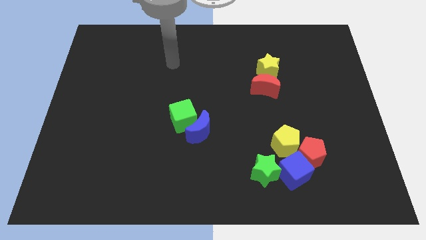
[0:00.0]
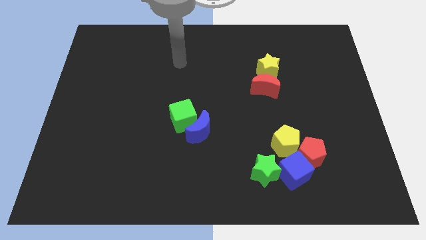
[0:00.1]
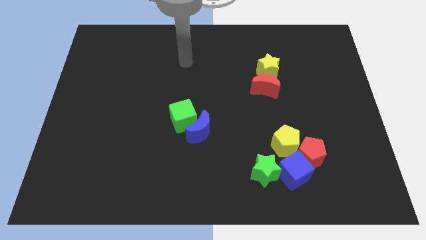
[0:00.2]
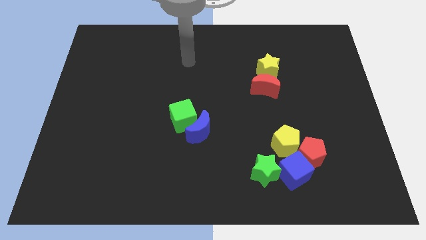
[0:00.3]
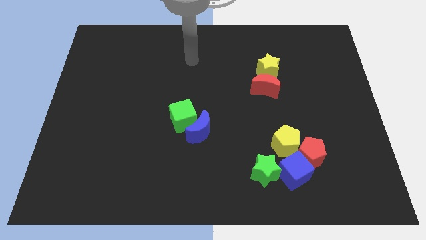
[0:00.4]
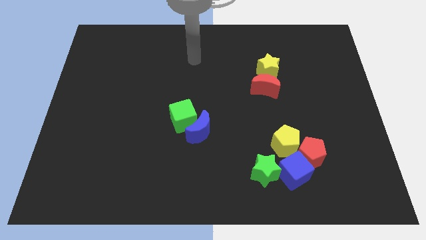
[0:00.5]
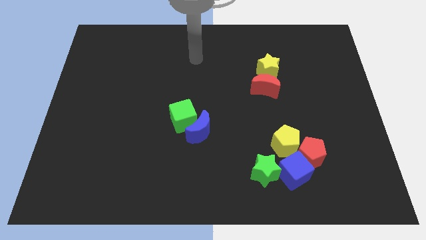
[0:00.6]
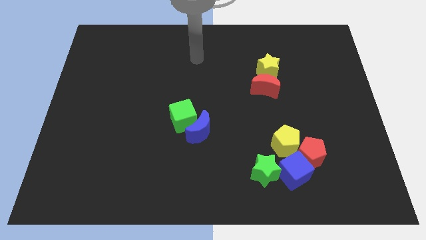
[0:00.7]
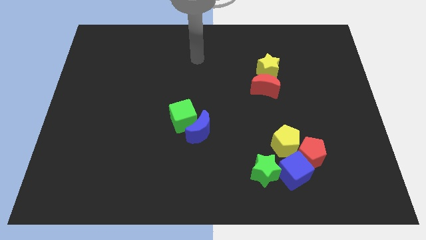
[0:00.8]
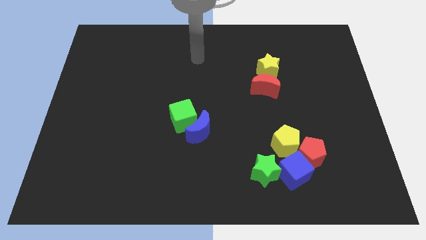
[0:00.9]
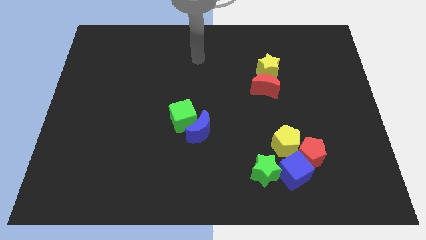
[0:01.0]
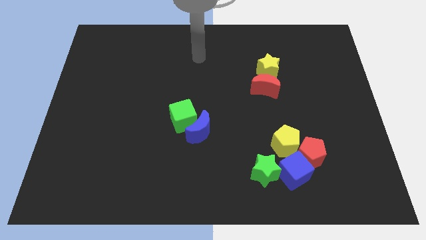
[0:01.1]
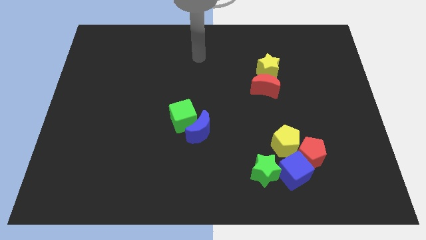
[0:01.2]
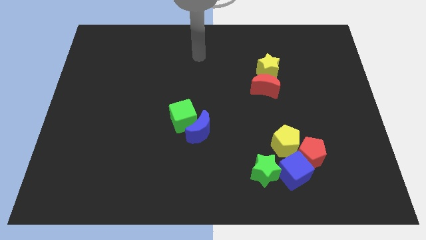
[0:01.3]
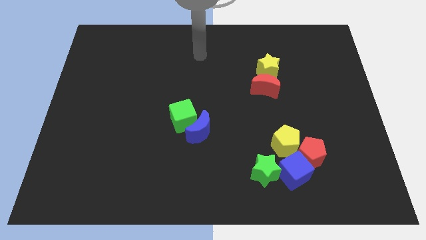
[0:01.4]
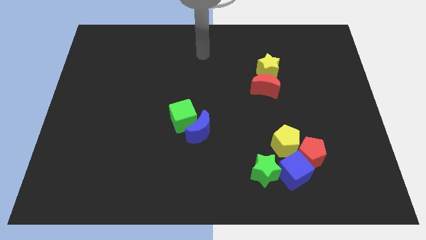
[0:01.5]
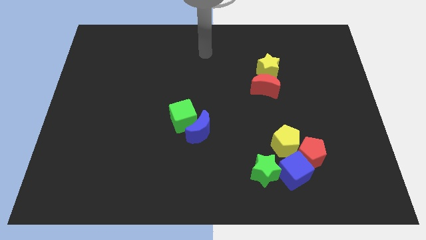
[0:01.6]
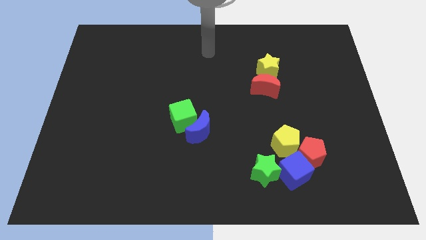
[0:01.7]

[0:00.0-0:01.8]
move the arm towards the top centre of the board

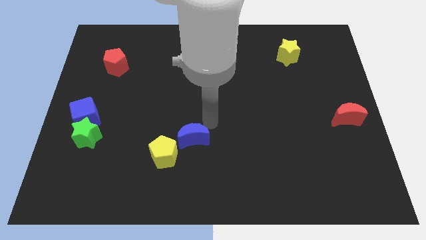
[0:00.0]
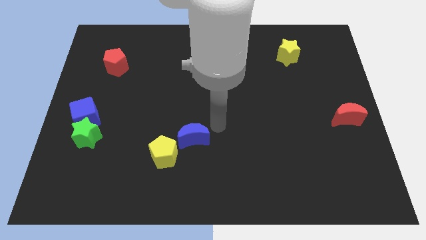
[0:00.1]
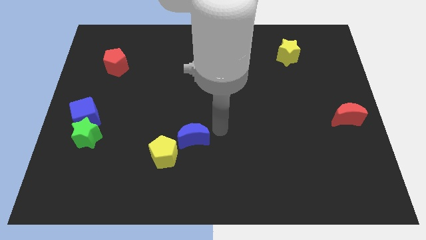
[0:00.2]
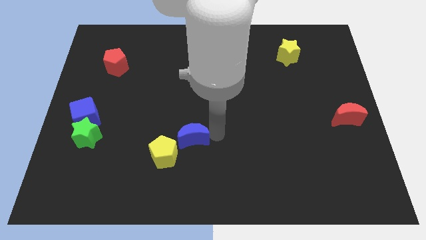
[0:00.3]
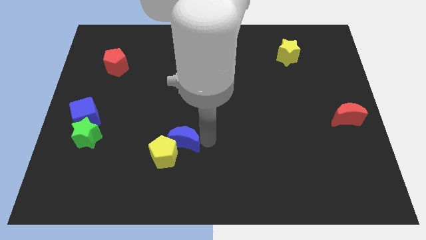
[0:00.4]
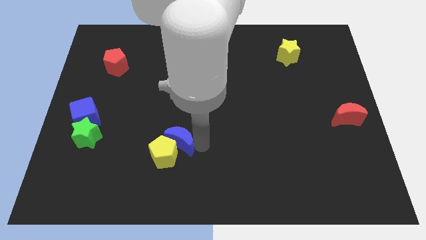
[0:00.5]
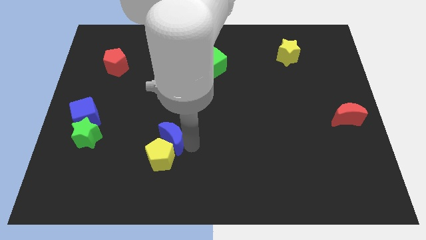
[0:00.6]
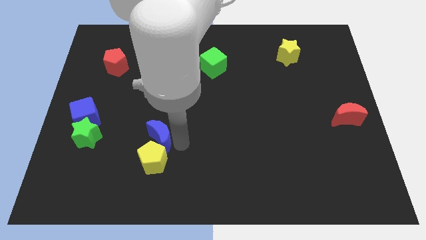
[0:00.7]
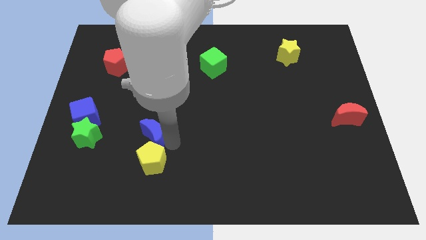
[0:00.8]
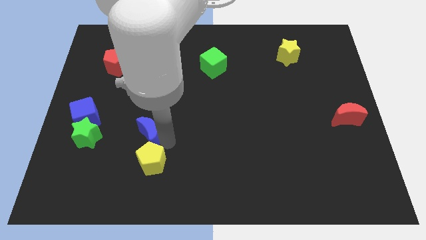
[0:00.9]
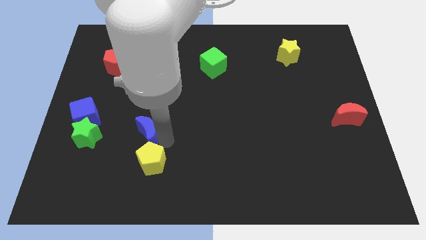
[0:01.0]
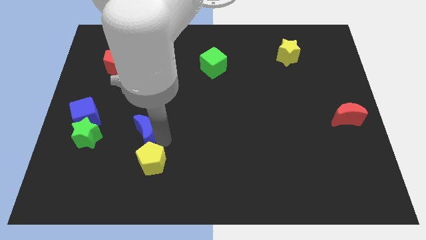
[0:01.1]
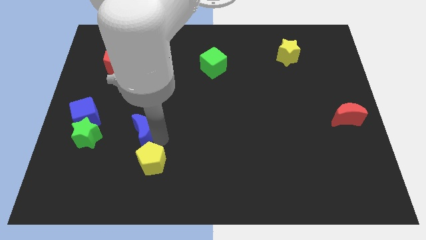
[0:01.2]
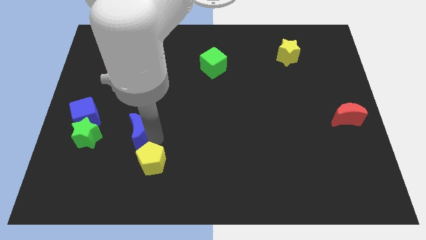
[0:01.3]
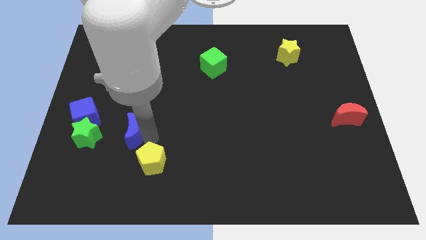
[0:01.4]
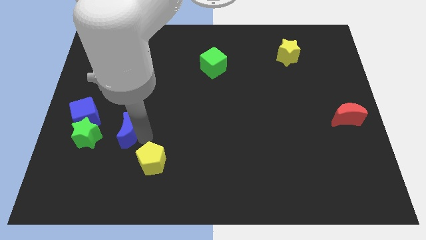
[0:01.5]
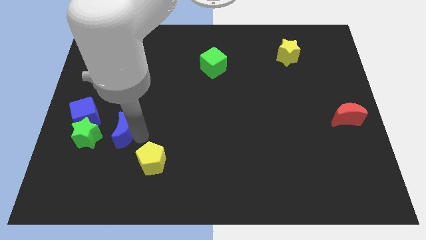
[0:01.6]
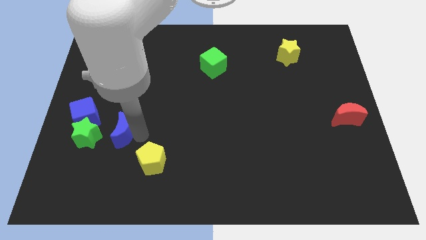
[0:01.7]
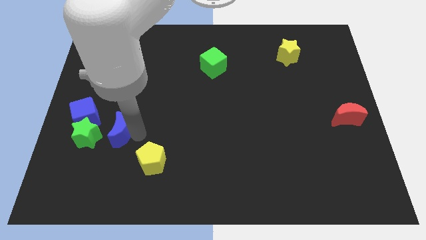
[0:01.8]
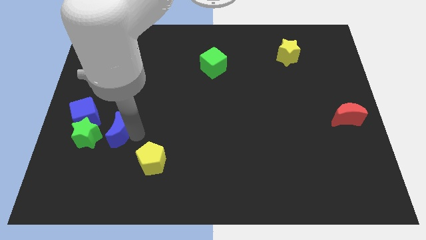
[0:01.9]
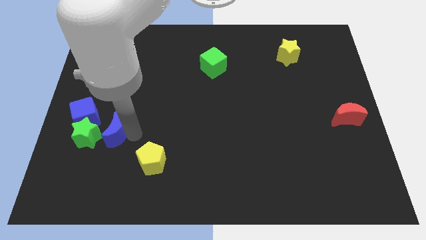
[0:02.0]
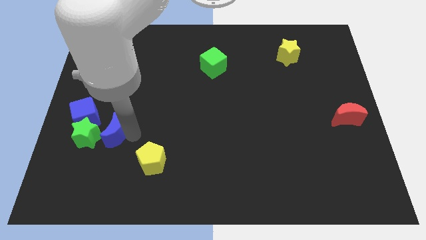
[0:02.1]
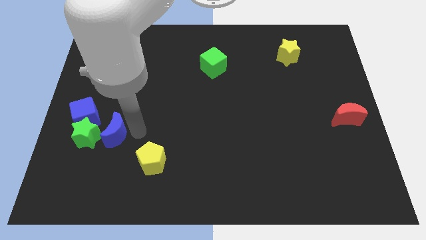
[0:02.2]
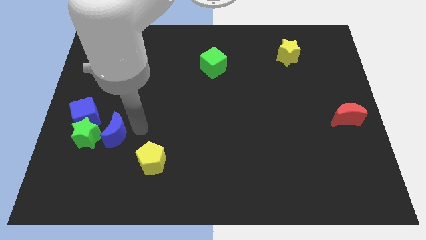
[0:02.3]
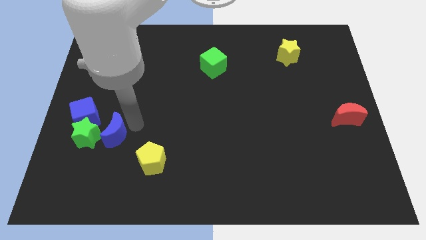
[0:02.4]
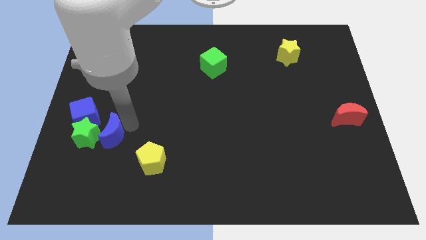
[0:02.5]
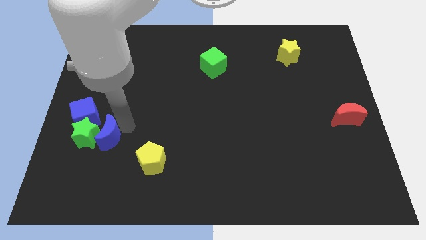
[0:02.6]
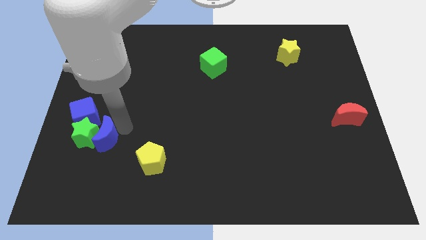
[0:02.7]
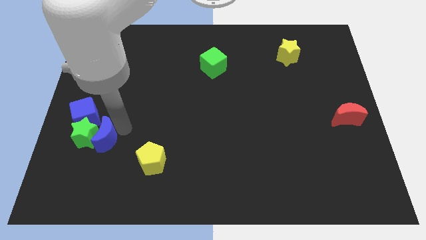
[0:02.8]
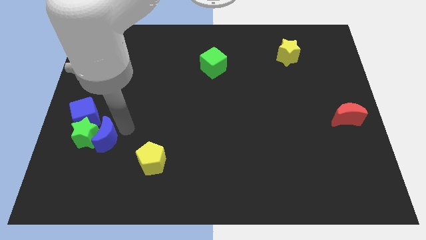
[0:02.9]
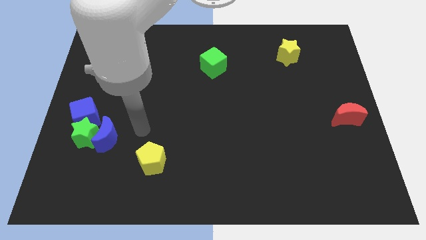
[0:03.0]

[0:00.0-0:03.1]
separate the blue moon with yellow pentagon towards the green star

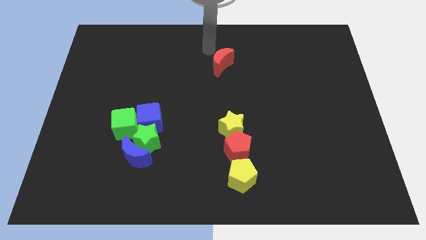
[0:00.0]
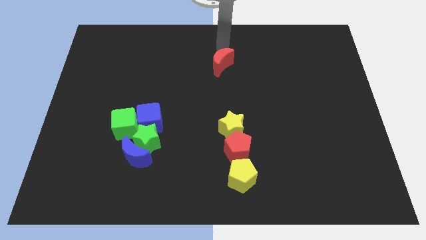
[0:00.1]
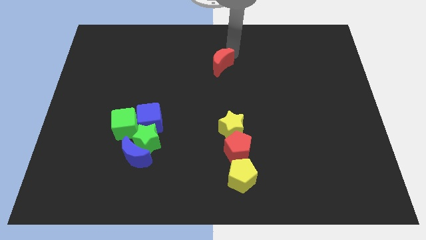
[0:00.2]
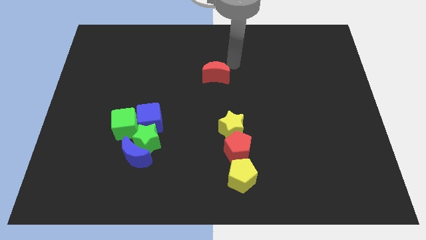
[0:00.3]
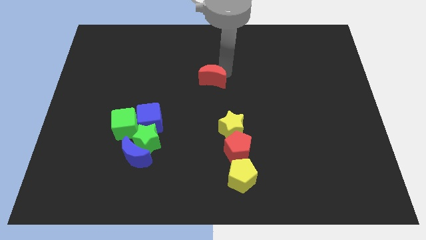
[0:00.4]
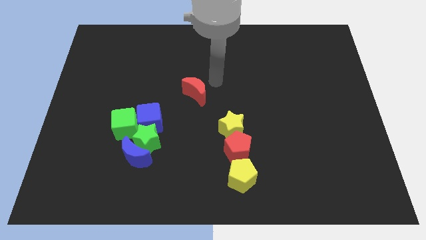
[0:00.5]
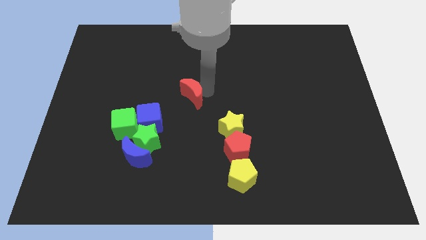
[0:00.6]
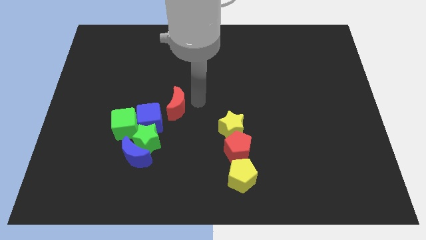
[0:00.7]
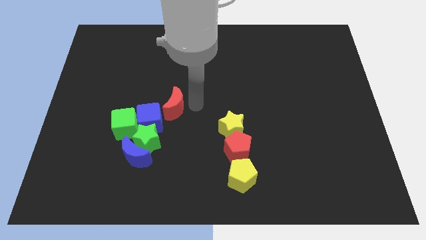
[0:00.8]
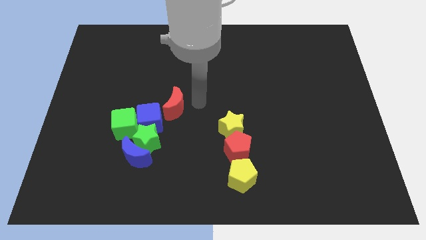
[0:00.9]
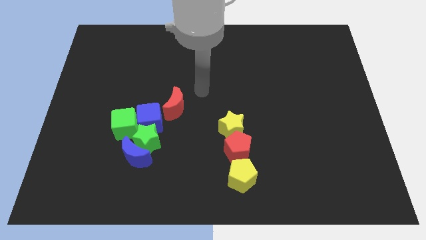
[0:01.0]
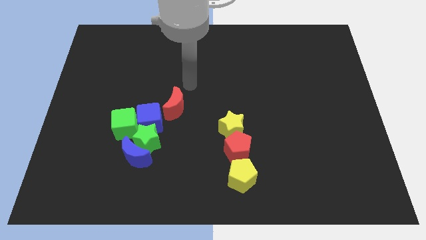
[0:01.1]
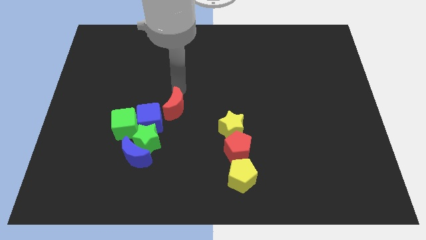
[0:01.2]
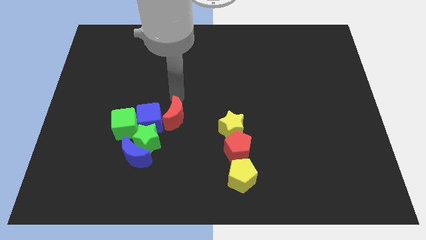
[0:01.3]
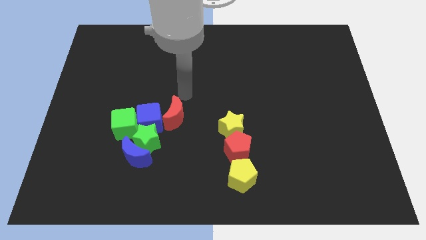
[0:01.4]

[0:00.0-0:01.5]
push the red moon to the right of the blue cube

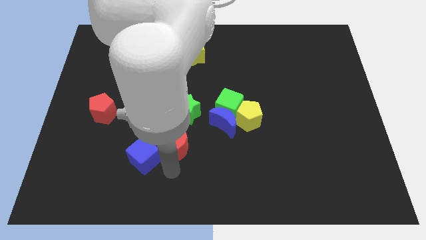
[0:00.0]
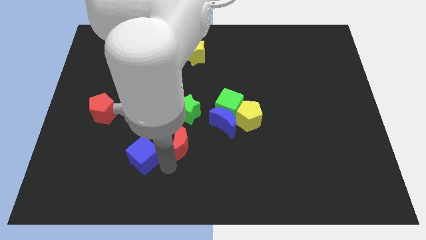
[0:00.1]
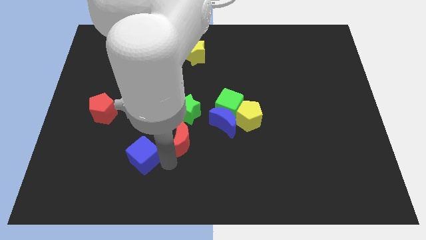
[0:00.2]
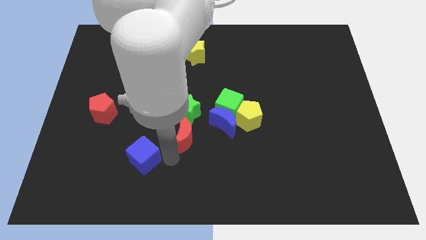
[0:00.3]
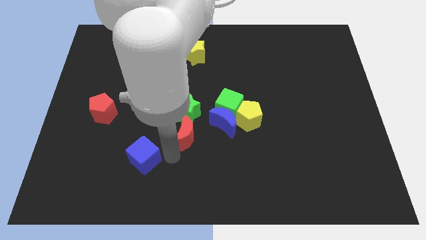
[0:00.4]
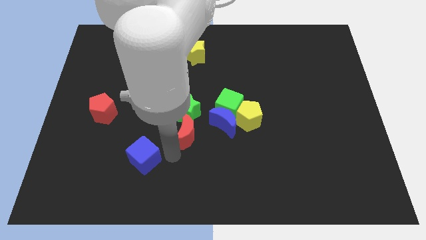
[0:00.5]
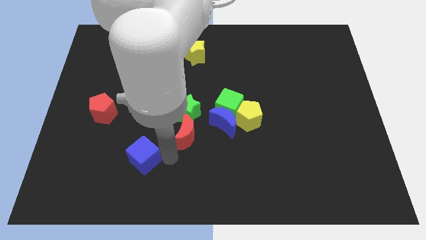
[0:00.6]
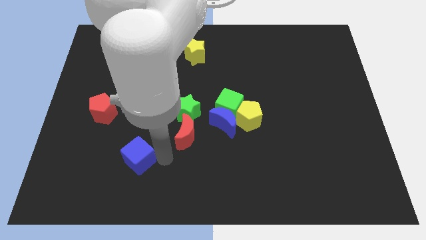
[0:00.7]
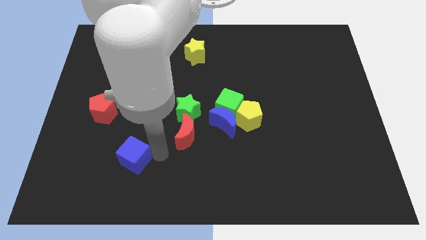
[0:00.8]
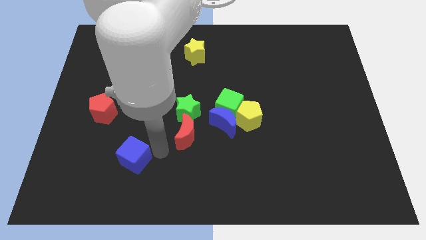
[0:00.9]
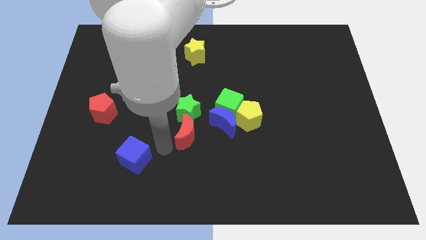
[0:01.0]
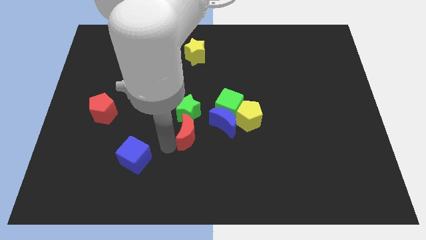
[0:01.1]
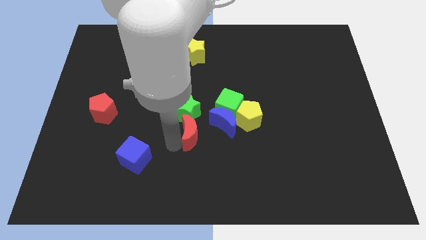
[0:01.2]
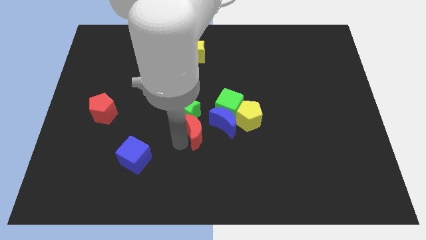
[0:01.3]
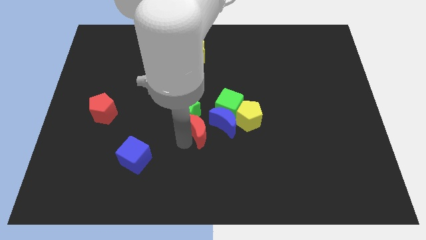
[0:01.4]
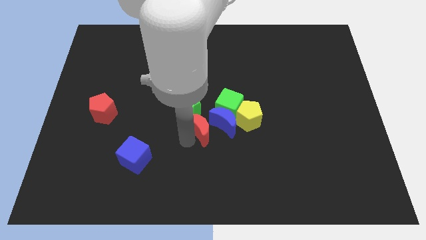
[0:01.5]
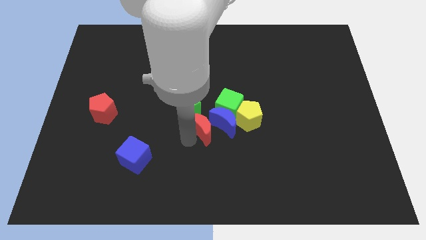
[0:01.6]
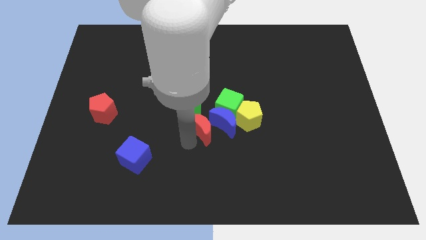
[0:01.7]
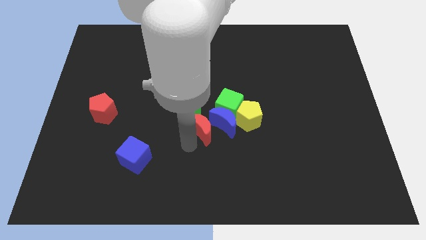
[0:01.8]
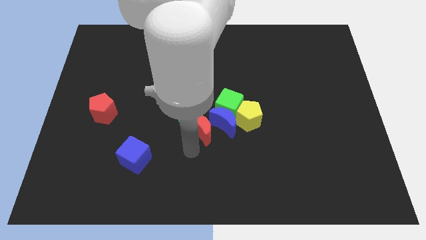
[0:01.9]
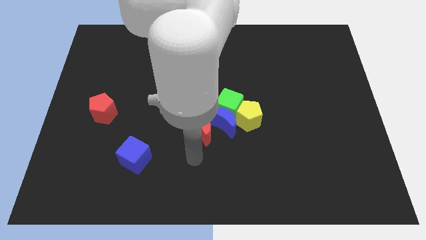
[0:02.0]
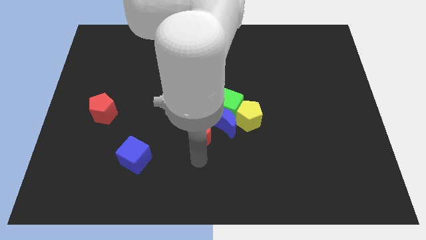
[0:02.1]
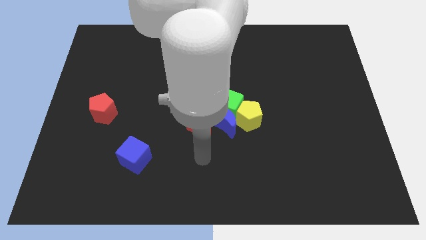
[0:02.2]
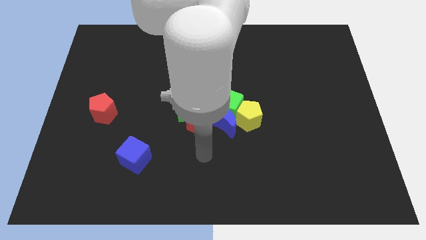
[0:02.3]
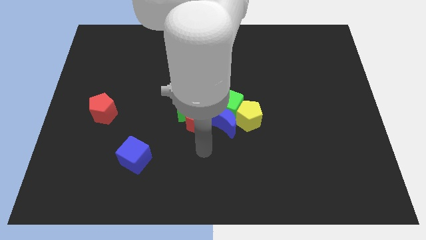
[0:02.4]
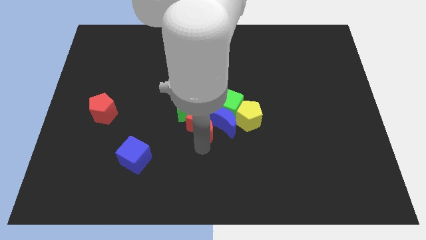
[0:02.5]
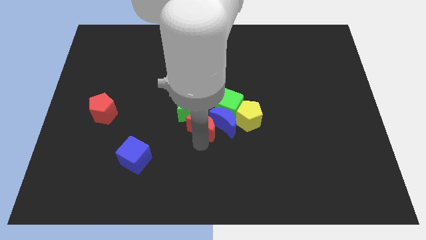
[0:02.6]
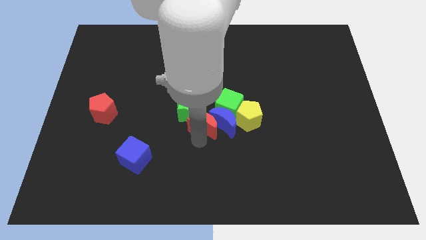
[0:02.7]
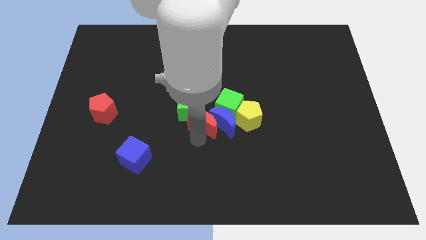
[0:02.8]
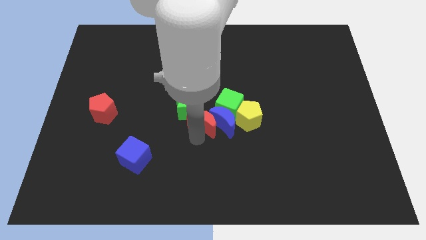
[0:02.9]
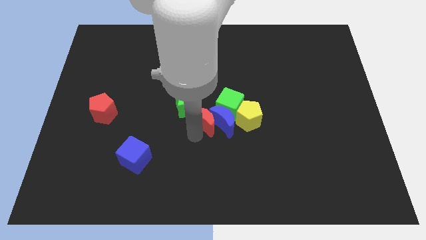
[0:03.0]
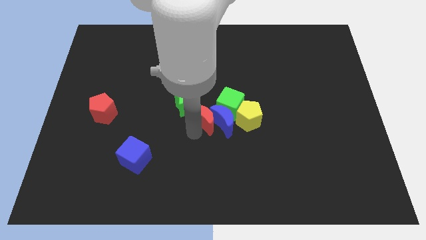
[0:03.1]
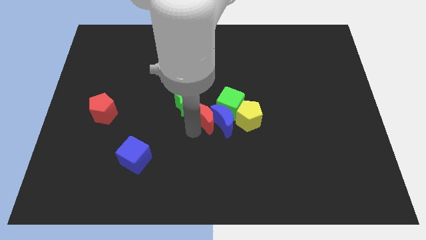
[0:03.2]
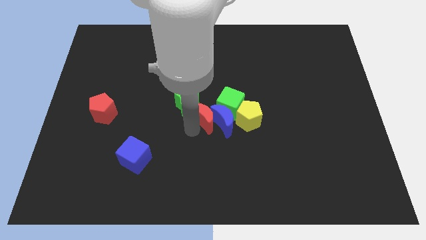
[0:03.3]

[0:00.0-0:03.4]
move red crescent into the blue crescent and green star
